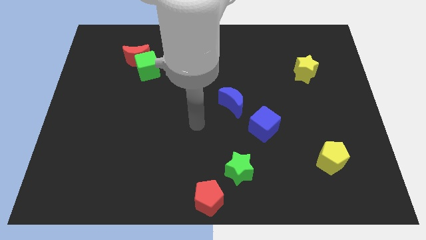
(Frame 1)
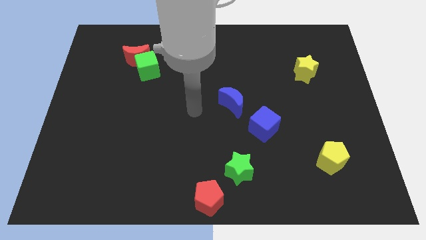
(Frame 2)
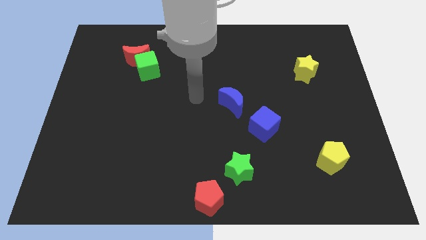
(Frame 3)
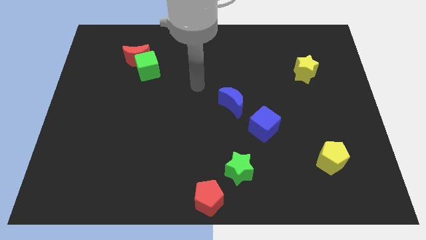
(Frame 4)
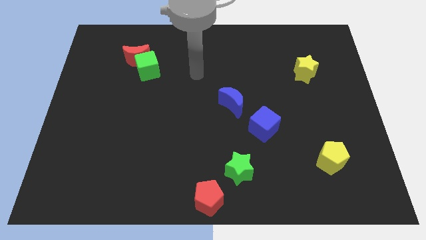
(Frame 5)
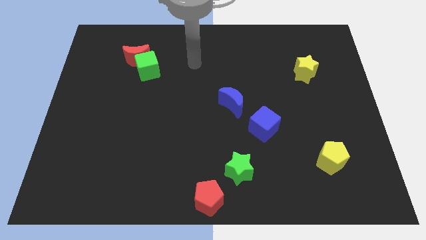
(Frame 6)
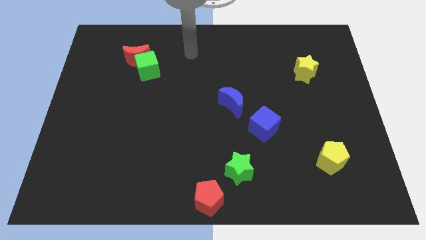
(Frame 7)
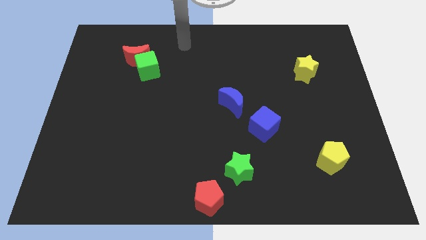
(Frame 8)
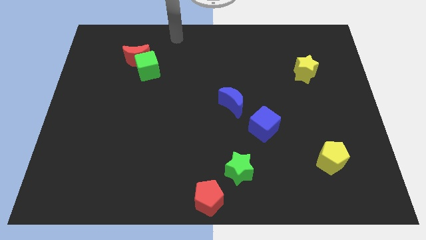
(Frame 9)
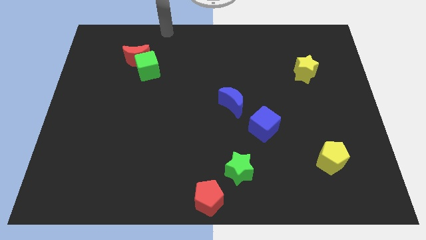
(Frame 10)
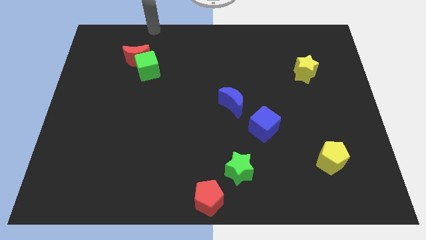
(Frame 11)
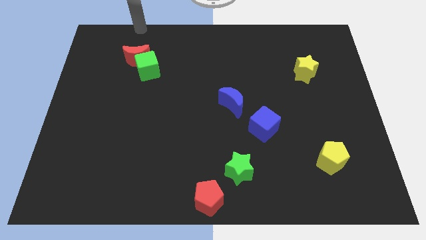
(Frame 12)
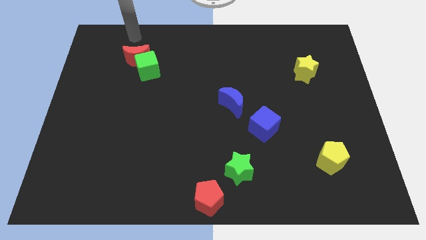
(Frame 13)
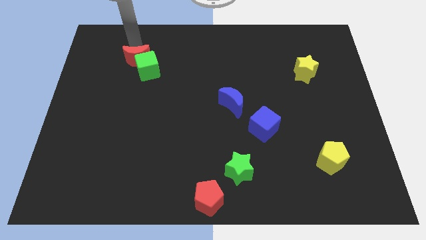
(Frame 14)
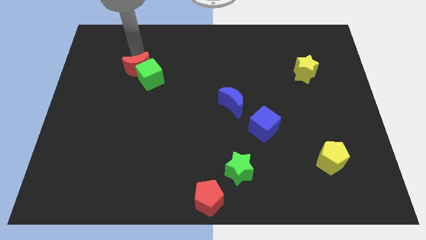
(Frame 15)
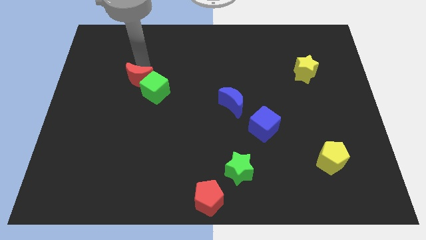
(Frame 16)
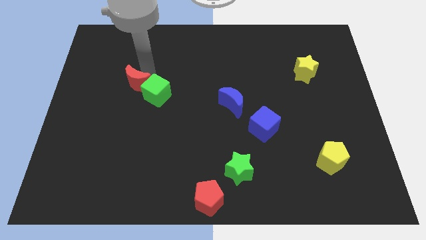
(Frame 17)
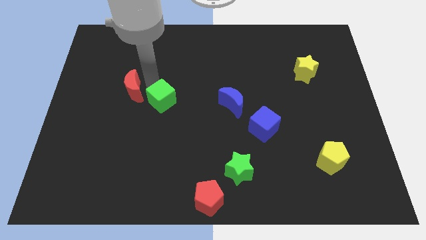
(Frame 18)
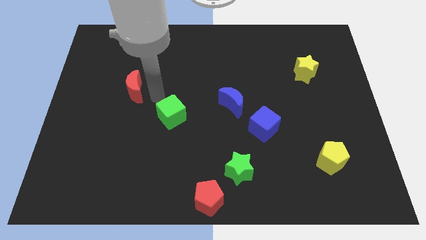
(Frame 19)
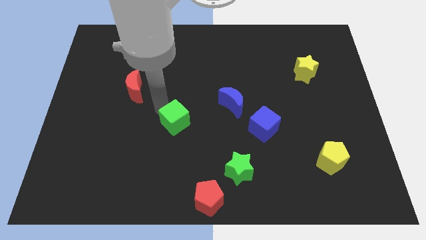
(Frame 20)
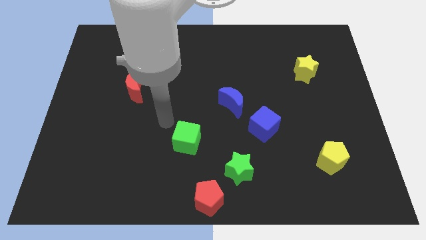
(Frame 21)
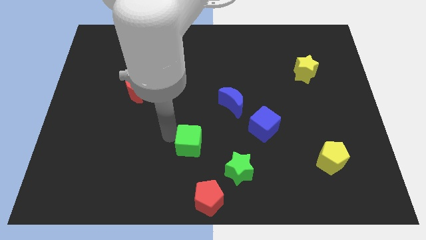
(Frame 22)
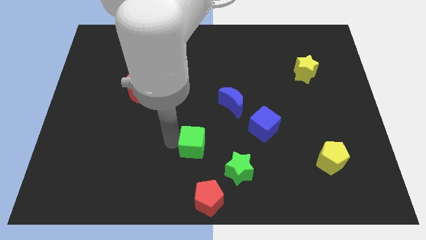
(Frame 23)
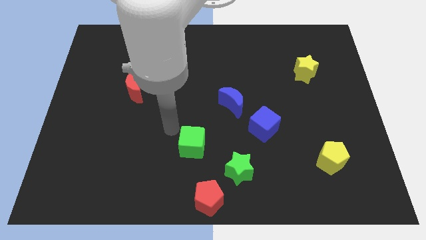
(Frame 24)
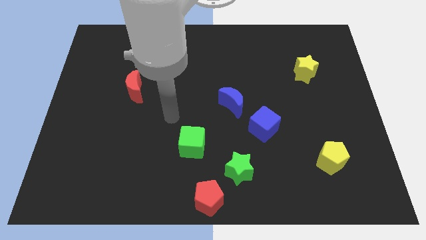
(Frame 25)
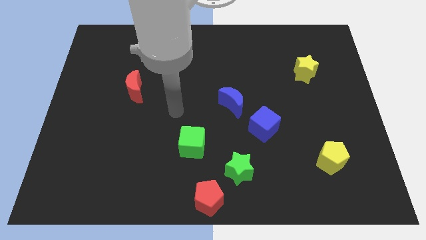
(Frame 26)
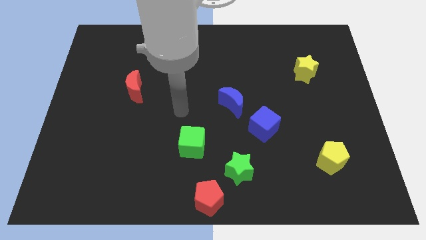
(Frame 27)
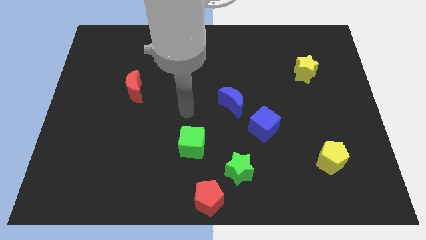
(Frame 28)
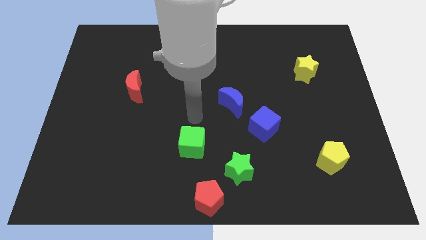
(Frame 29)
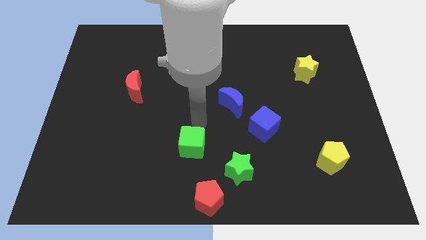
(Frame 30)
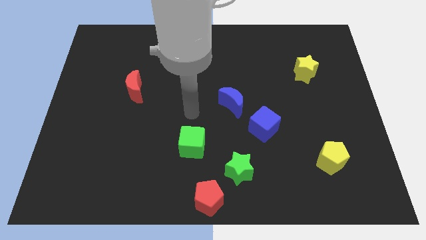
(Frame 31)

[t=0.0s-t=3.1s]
separate green cube and red moon

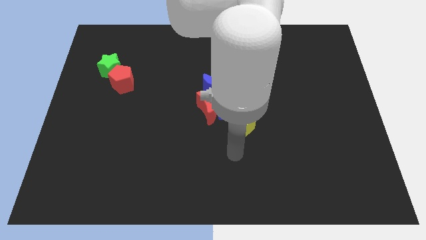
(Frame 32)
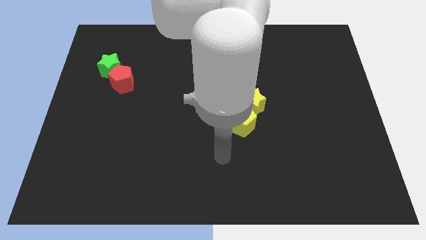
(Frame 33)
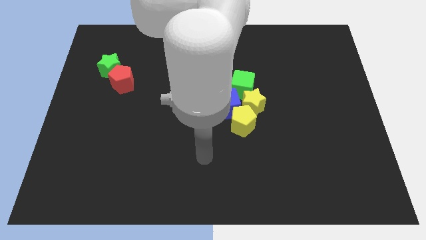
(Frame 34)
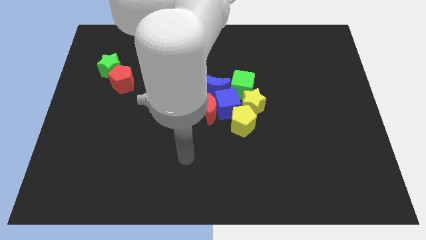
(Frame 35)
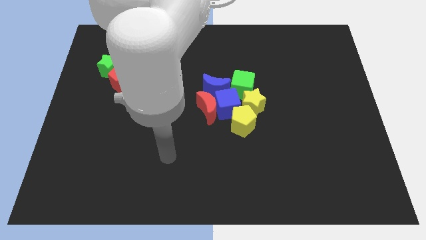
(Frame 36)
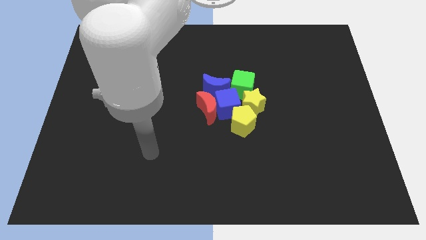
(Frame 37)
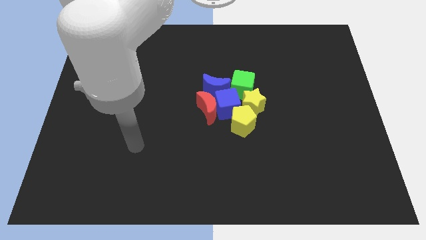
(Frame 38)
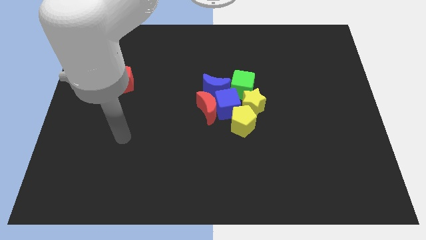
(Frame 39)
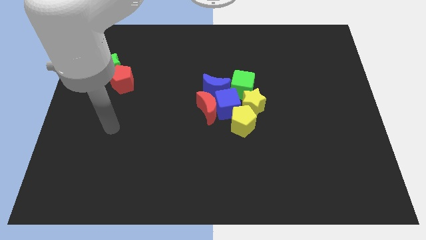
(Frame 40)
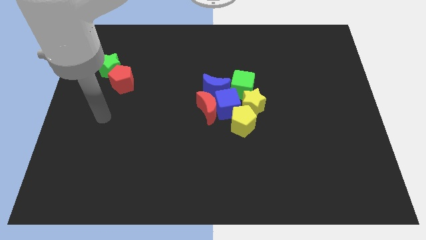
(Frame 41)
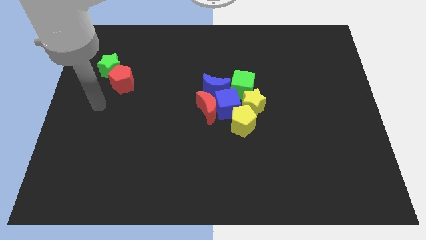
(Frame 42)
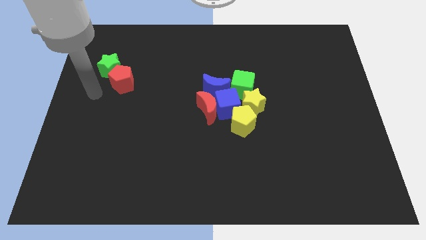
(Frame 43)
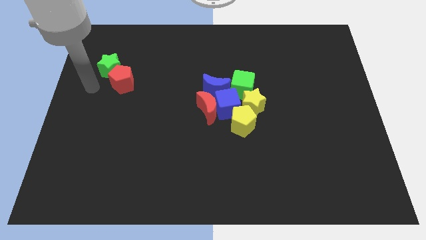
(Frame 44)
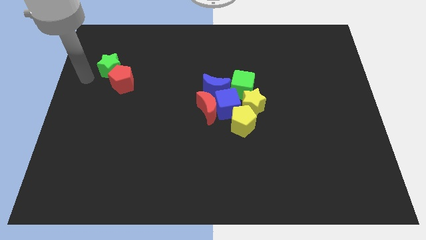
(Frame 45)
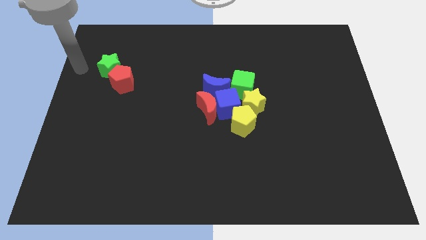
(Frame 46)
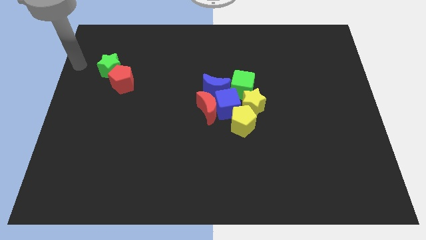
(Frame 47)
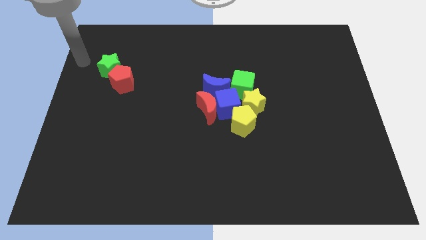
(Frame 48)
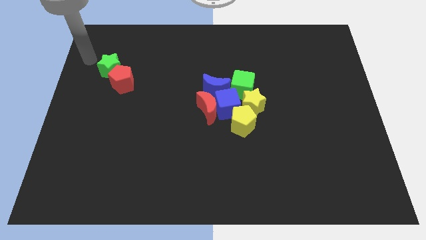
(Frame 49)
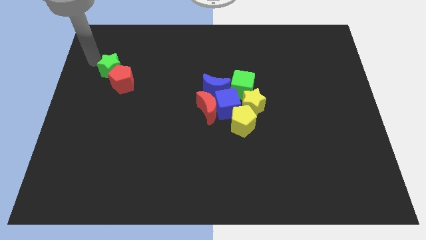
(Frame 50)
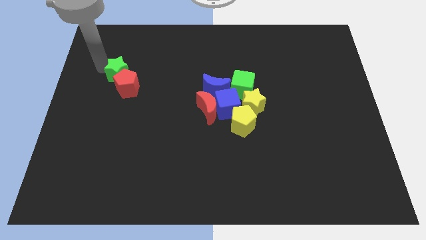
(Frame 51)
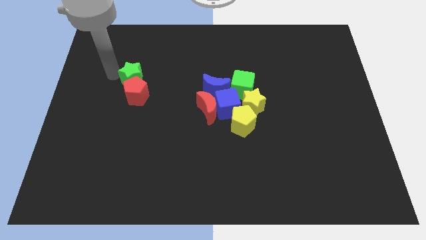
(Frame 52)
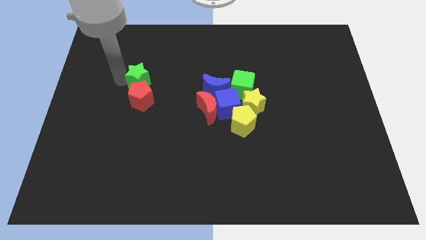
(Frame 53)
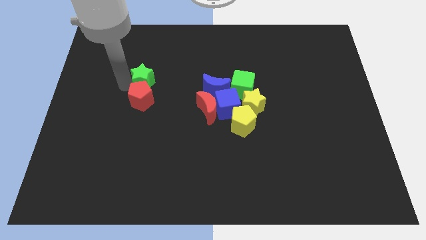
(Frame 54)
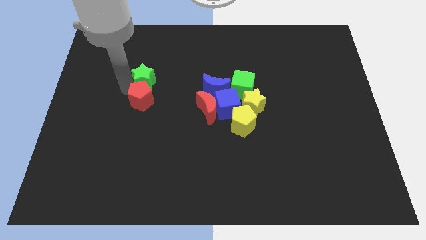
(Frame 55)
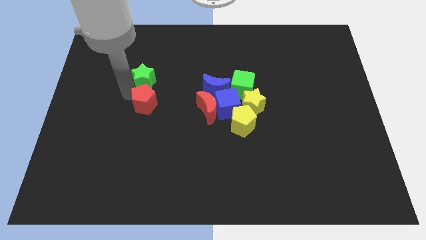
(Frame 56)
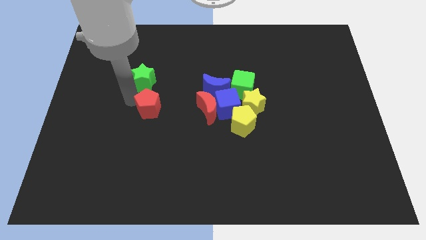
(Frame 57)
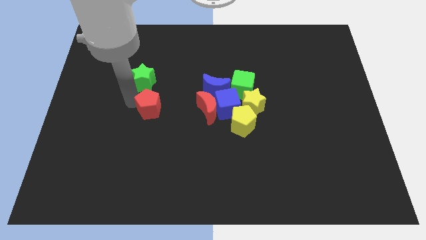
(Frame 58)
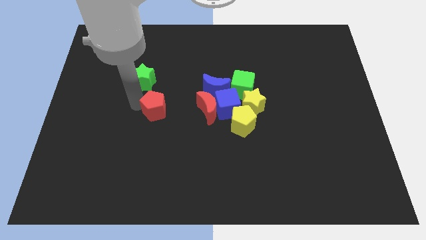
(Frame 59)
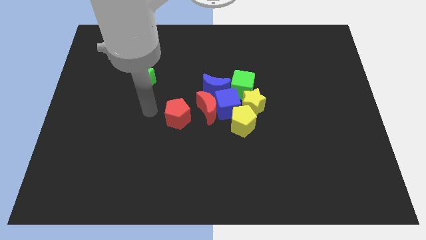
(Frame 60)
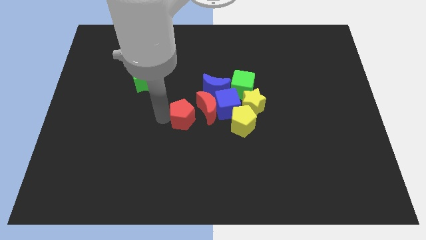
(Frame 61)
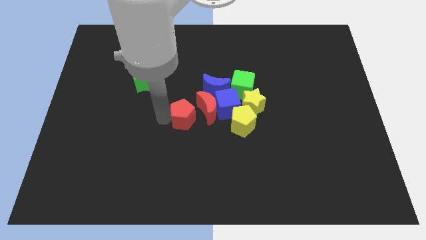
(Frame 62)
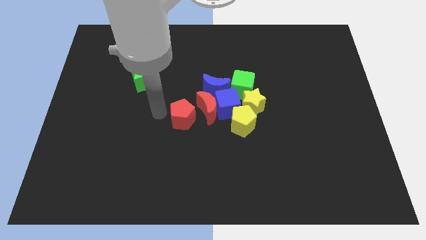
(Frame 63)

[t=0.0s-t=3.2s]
separate the red pentagon from the green star

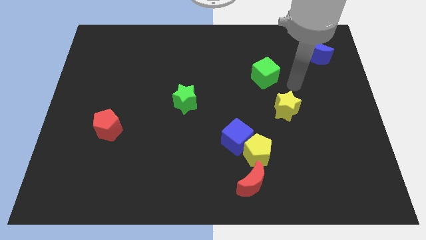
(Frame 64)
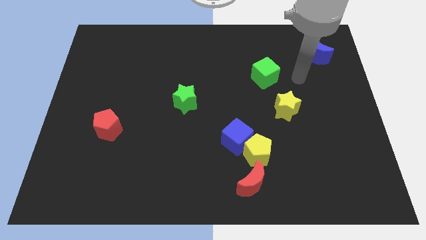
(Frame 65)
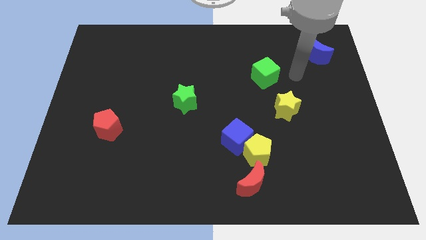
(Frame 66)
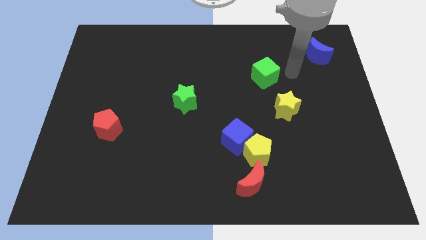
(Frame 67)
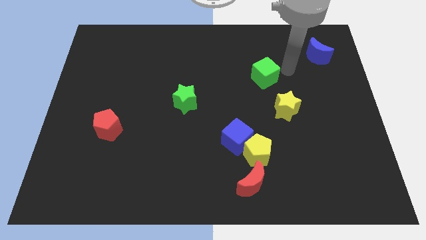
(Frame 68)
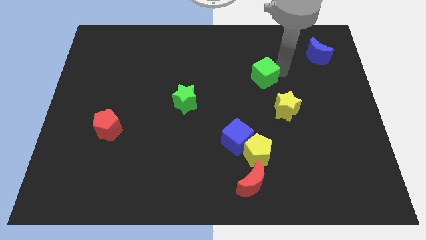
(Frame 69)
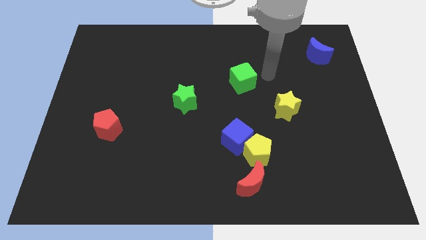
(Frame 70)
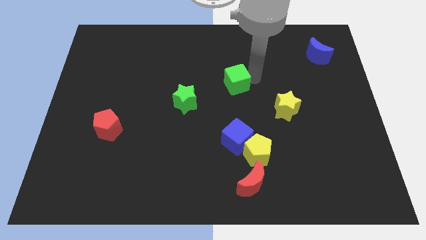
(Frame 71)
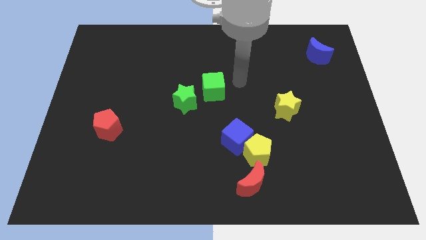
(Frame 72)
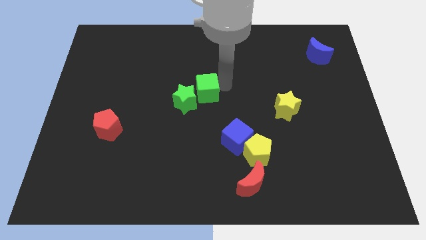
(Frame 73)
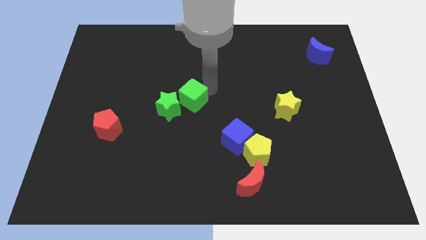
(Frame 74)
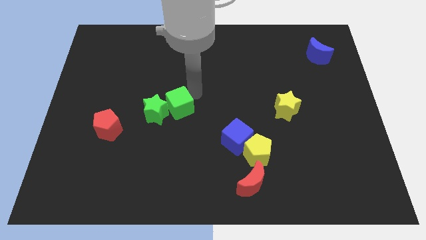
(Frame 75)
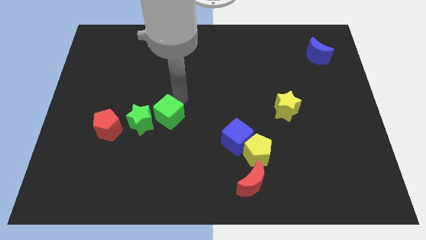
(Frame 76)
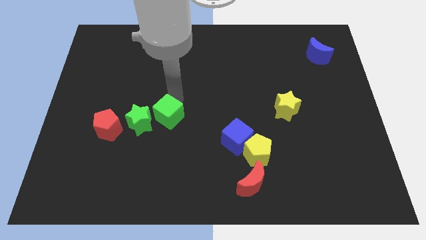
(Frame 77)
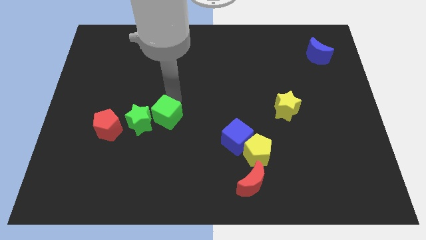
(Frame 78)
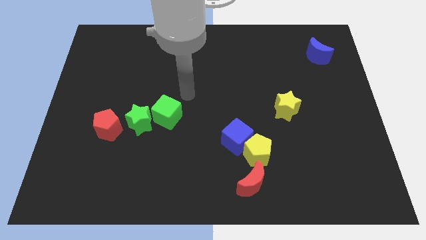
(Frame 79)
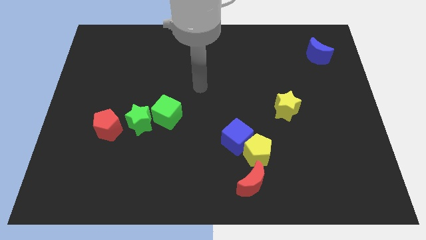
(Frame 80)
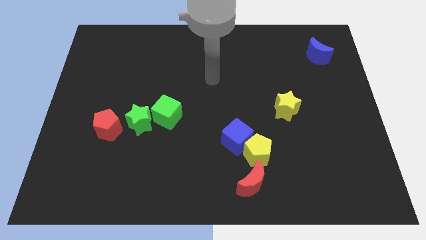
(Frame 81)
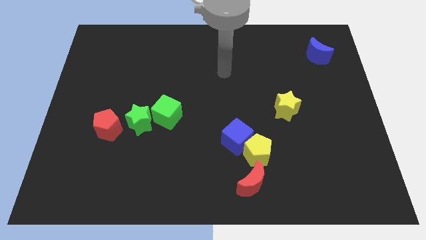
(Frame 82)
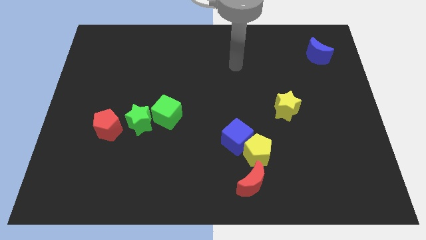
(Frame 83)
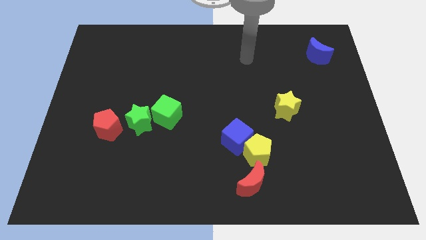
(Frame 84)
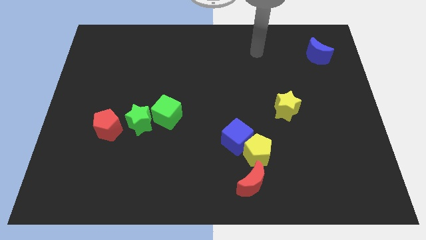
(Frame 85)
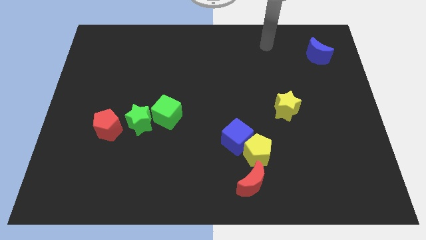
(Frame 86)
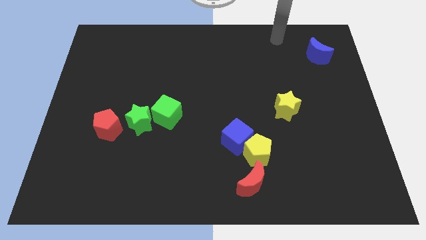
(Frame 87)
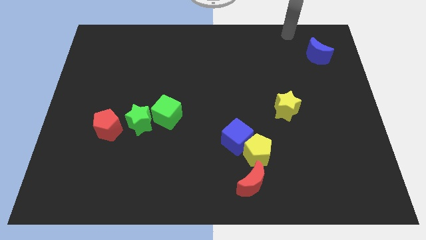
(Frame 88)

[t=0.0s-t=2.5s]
push the green cube to the right of the green star
